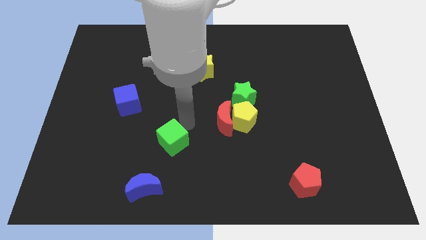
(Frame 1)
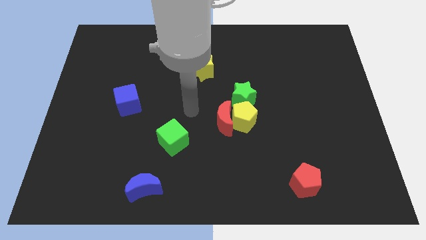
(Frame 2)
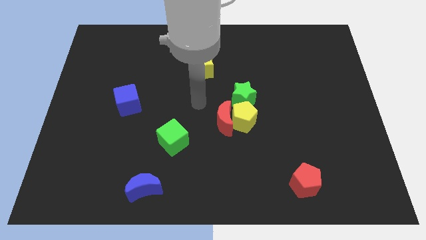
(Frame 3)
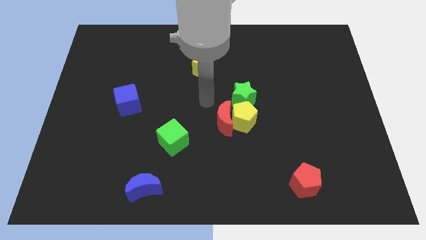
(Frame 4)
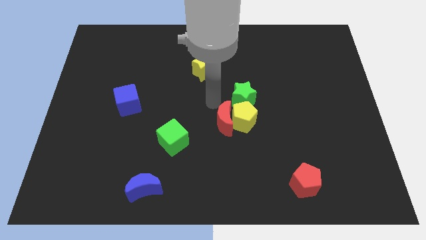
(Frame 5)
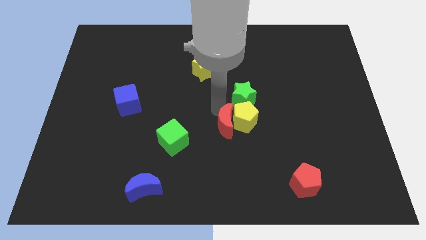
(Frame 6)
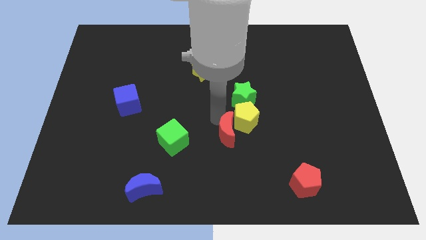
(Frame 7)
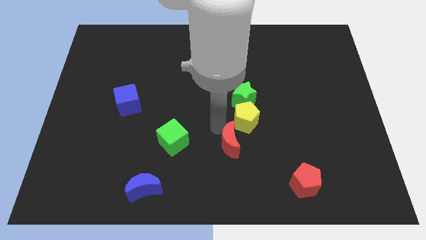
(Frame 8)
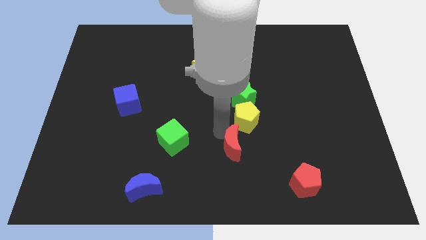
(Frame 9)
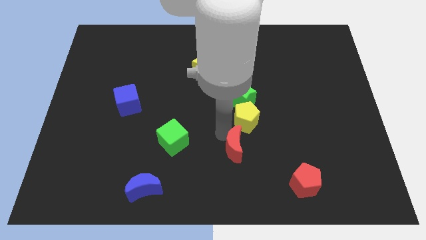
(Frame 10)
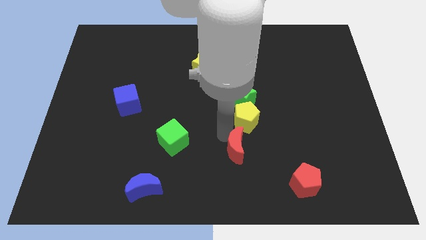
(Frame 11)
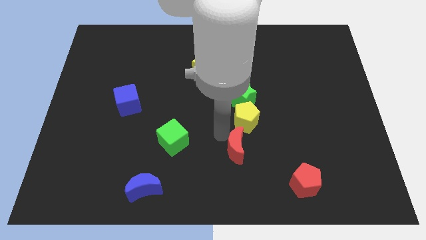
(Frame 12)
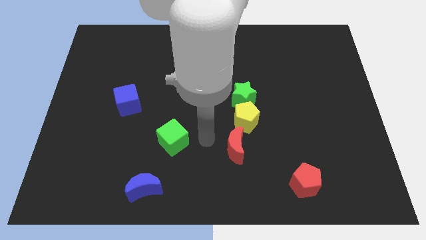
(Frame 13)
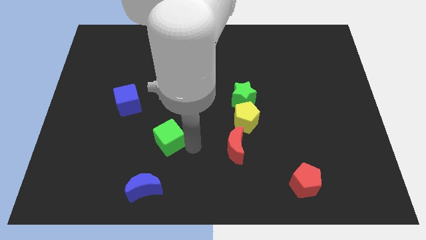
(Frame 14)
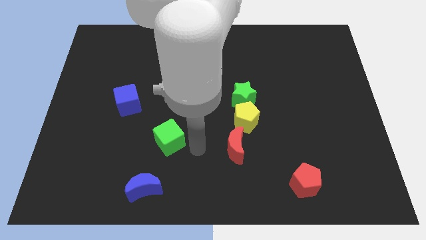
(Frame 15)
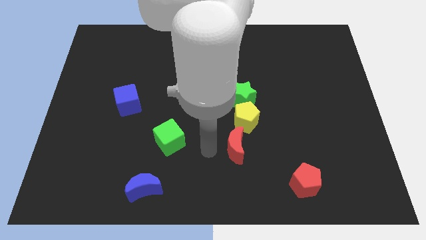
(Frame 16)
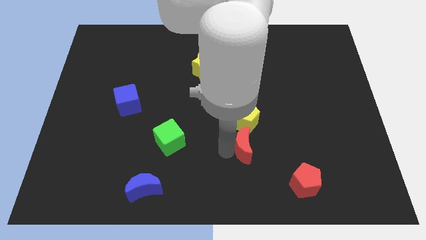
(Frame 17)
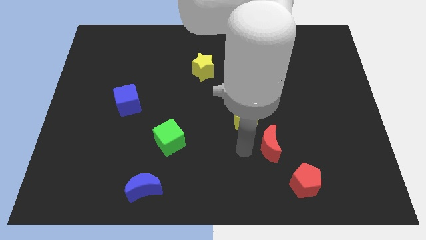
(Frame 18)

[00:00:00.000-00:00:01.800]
move the red crecent to the bottom side of the yellow pentagon

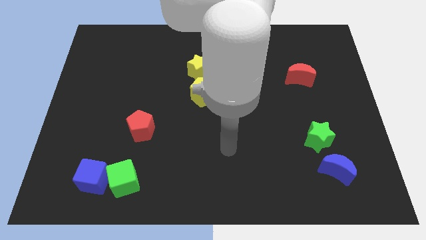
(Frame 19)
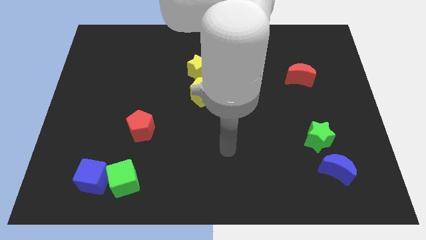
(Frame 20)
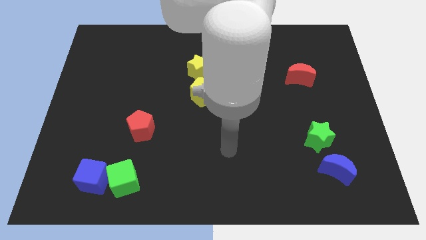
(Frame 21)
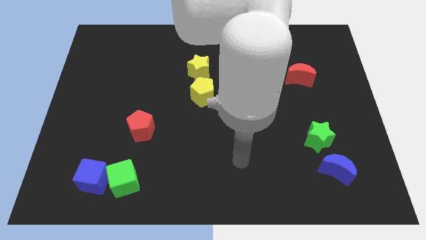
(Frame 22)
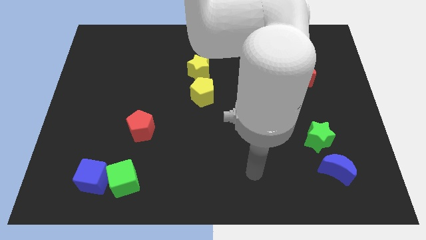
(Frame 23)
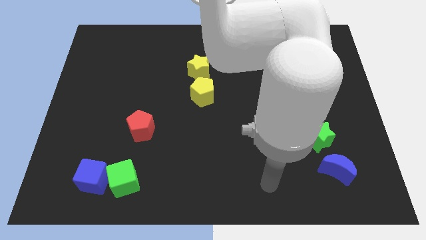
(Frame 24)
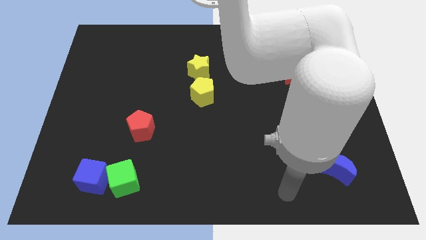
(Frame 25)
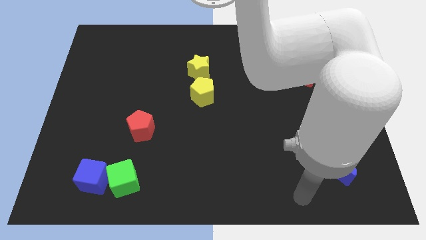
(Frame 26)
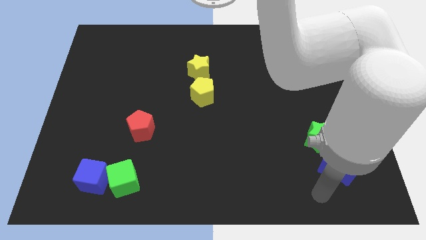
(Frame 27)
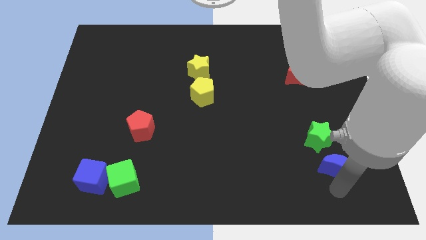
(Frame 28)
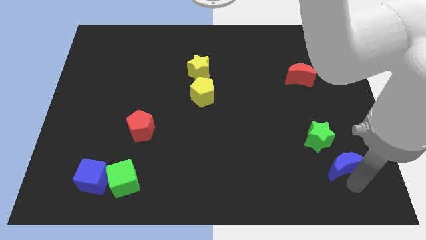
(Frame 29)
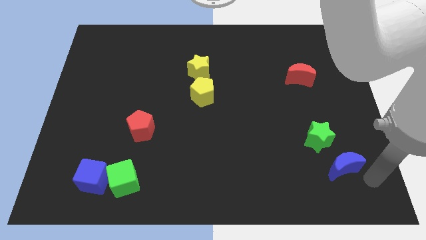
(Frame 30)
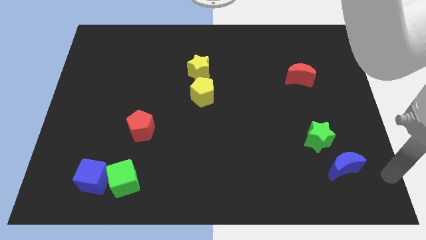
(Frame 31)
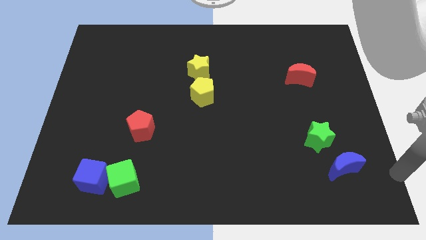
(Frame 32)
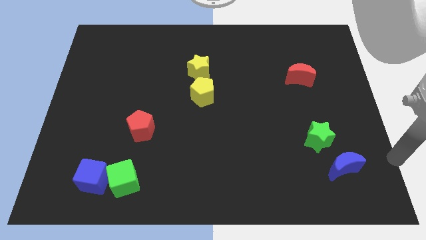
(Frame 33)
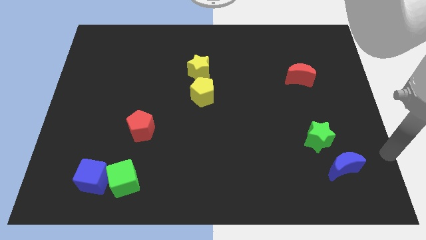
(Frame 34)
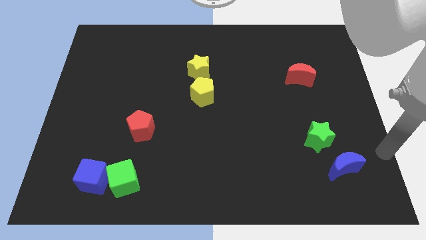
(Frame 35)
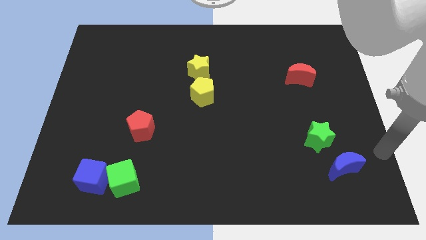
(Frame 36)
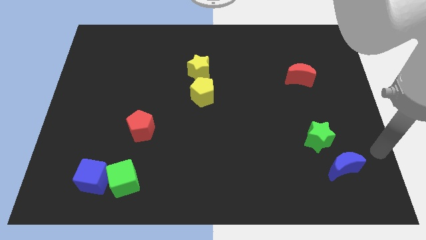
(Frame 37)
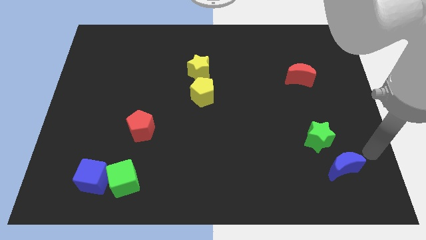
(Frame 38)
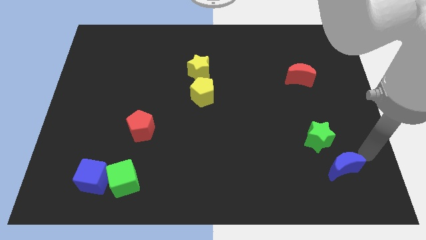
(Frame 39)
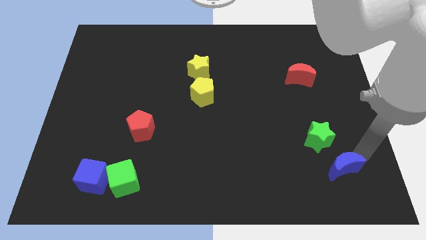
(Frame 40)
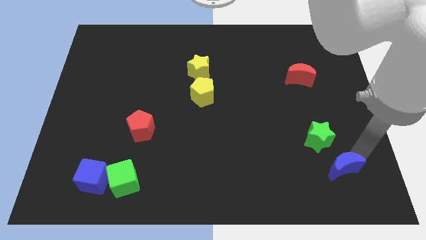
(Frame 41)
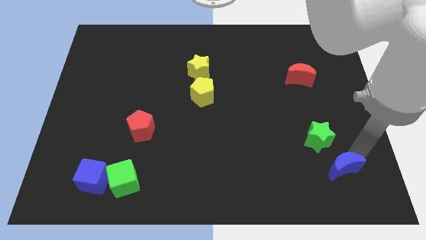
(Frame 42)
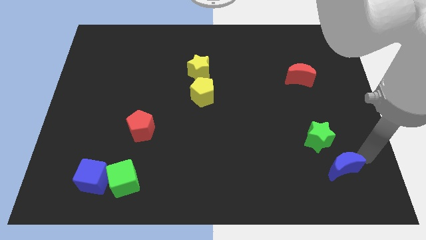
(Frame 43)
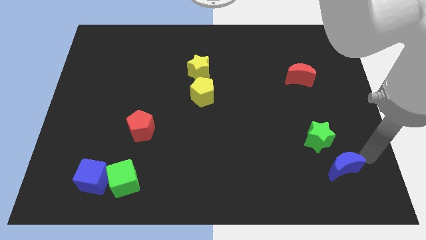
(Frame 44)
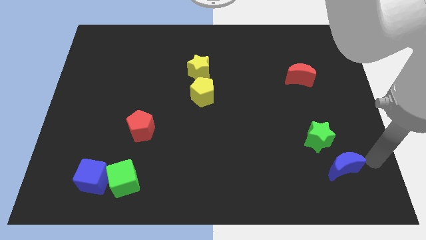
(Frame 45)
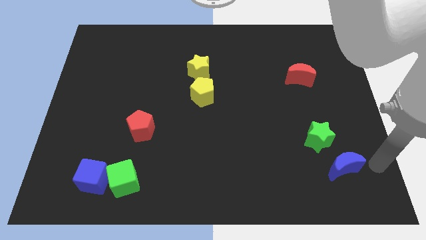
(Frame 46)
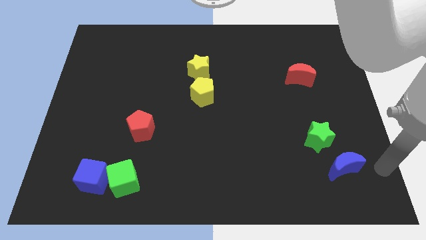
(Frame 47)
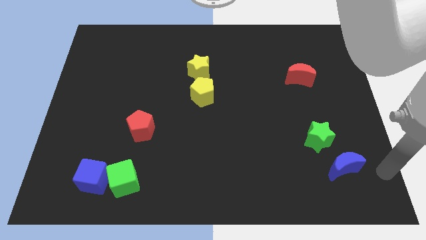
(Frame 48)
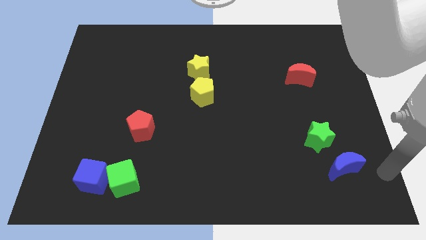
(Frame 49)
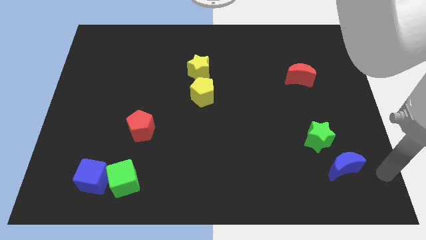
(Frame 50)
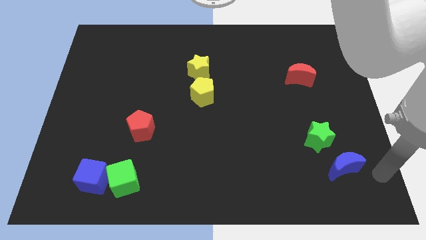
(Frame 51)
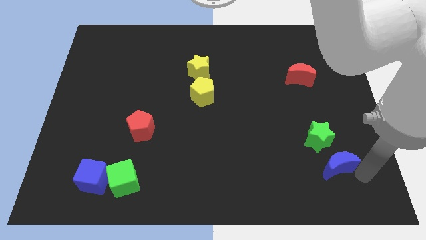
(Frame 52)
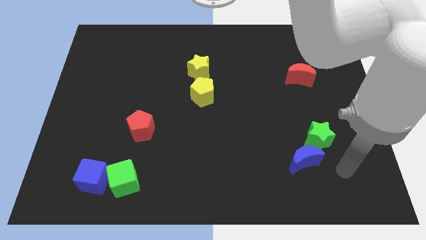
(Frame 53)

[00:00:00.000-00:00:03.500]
slide the blue moon slightly to the left

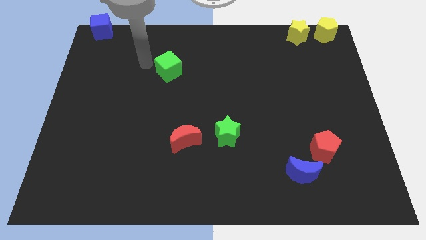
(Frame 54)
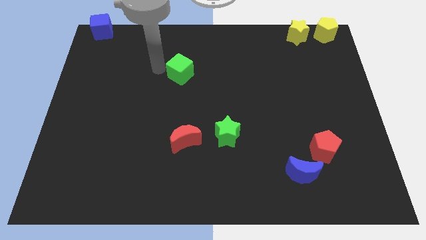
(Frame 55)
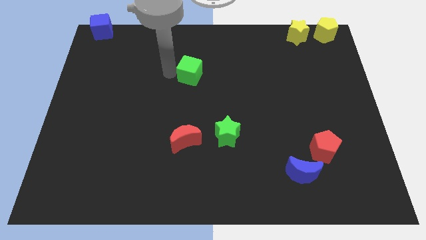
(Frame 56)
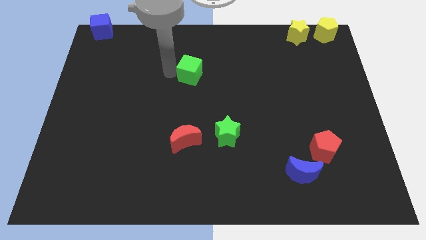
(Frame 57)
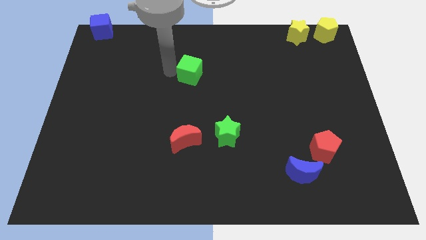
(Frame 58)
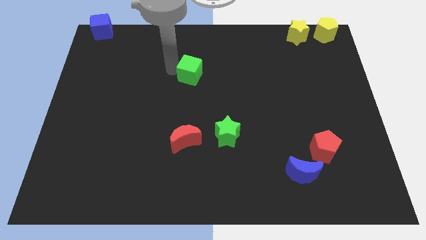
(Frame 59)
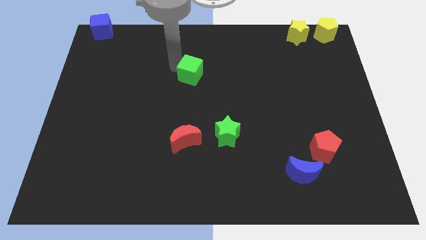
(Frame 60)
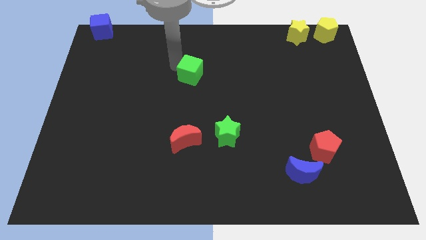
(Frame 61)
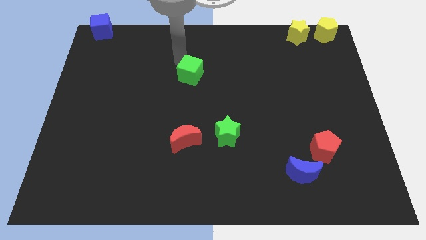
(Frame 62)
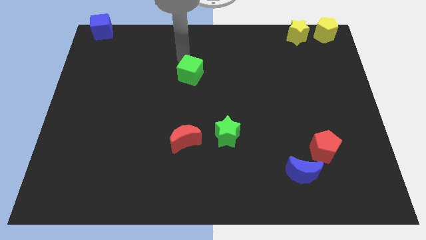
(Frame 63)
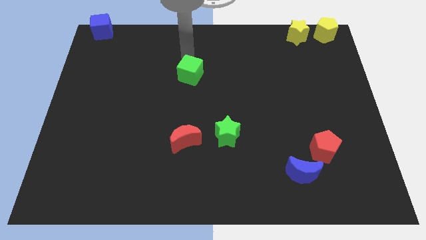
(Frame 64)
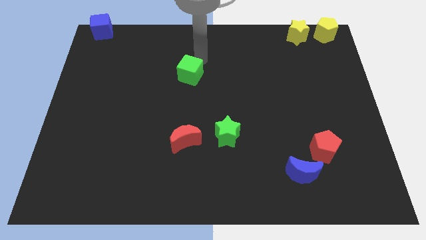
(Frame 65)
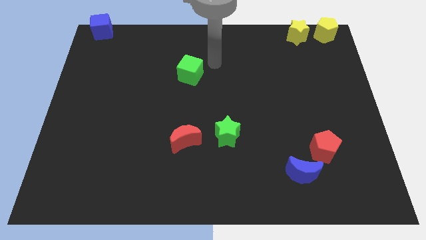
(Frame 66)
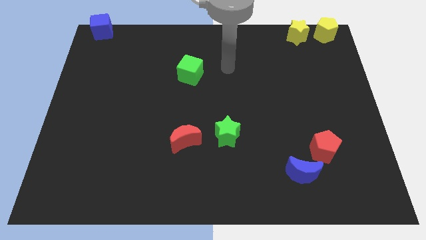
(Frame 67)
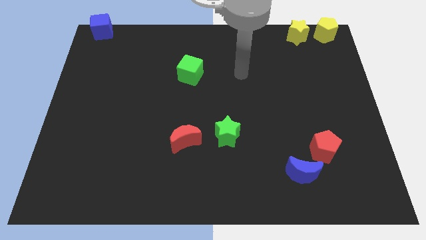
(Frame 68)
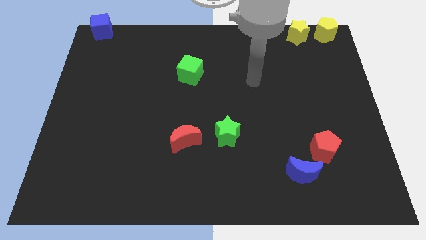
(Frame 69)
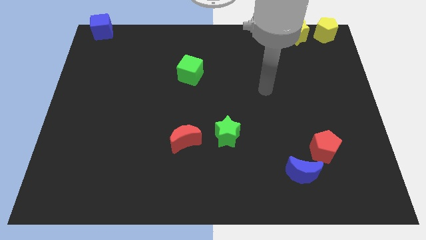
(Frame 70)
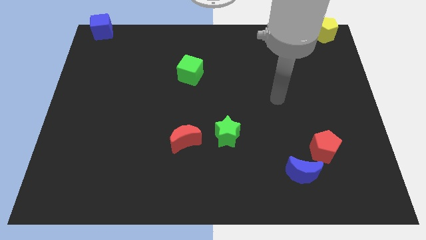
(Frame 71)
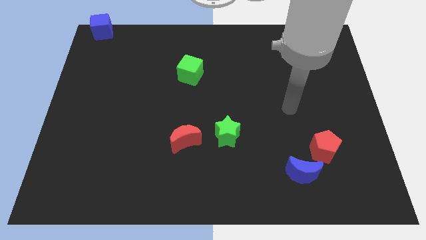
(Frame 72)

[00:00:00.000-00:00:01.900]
slightly push the green cube towards the right bottom

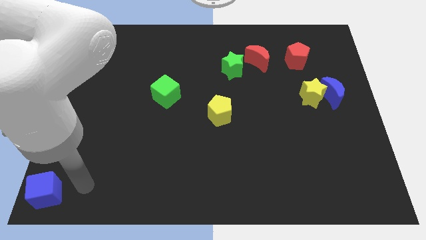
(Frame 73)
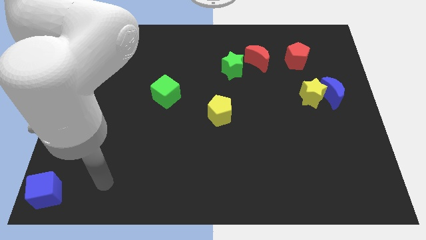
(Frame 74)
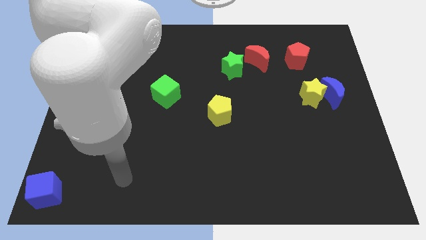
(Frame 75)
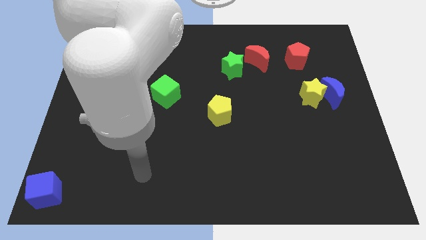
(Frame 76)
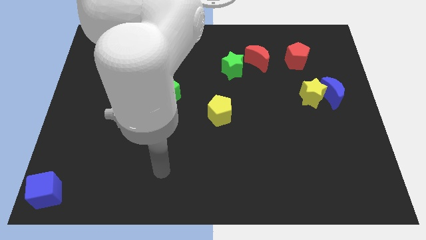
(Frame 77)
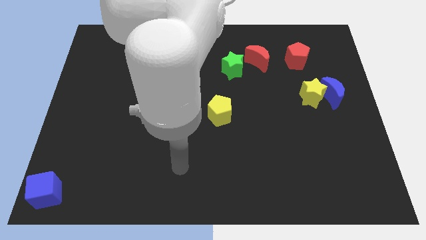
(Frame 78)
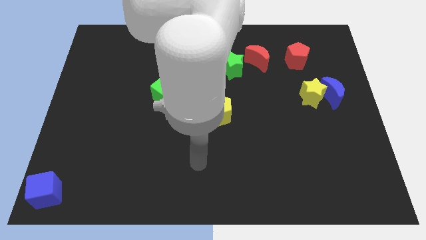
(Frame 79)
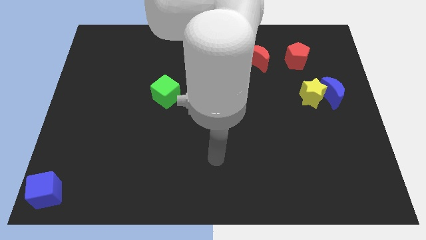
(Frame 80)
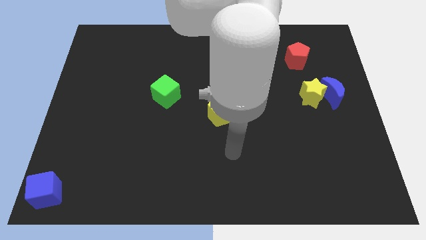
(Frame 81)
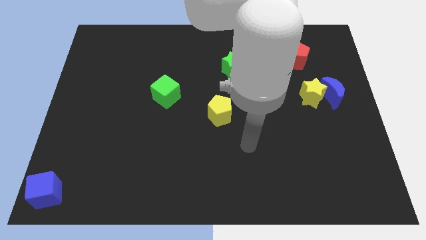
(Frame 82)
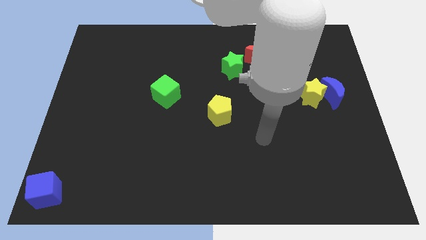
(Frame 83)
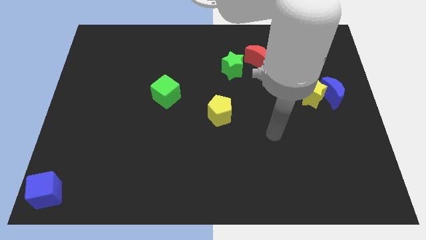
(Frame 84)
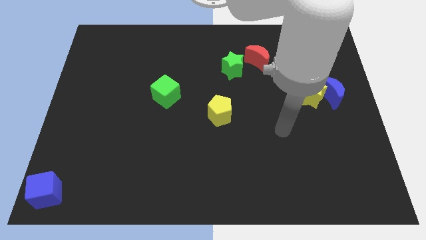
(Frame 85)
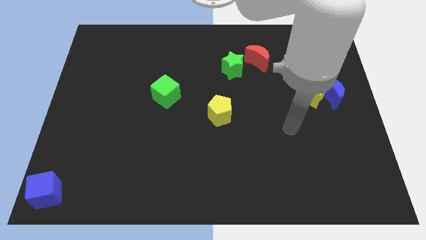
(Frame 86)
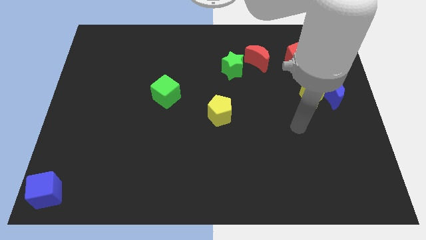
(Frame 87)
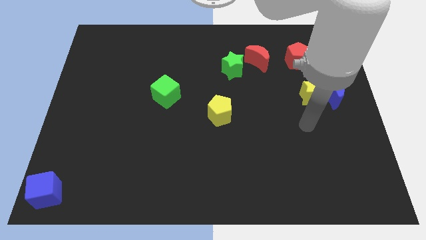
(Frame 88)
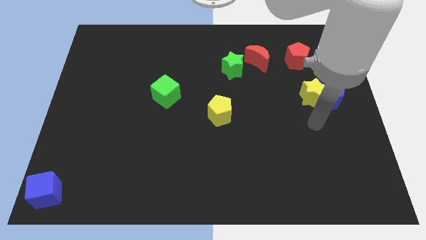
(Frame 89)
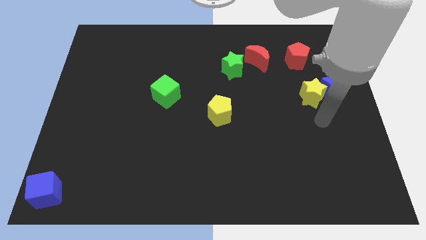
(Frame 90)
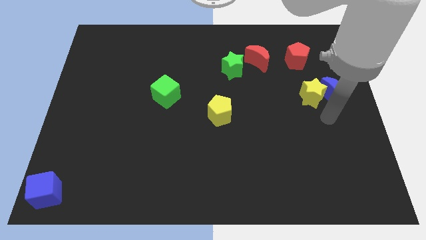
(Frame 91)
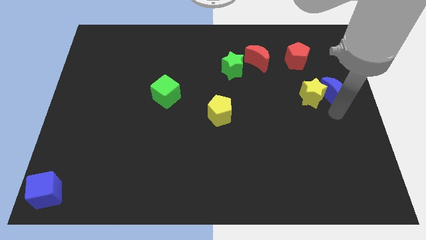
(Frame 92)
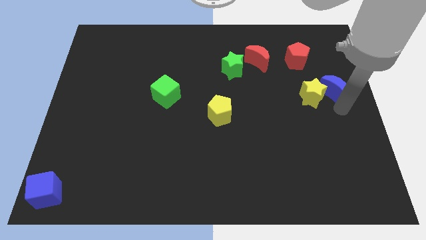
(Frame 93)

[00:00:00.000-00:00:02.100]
slightly move blue moon
